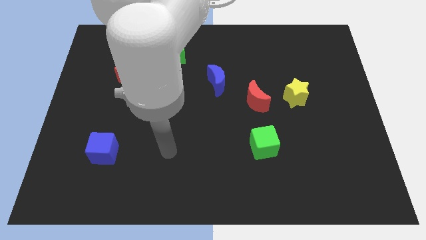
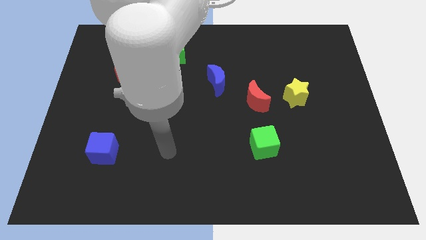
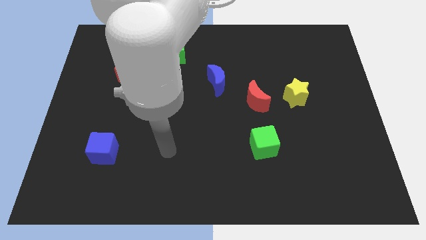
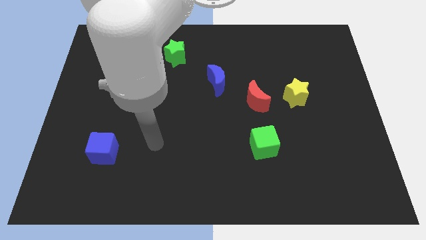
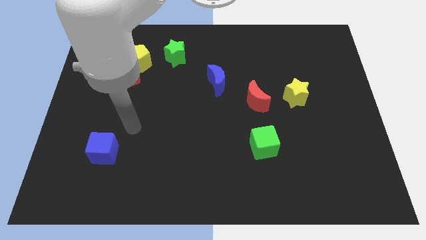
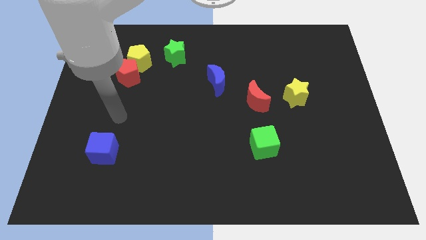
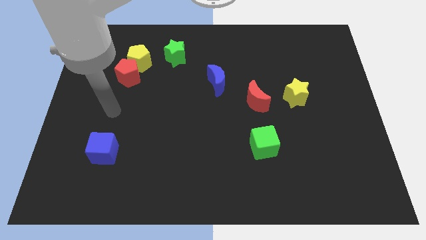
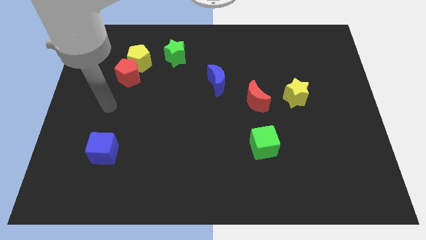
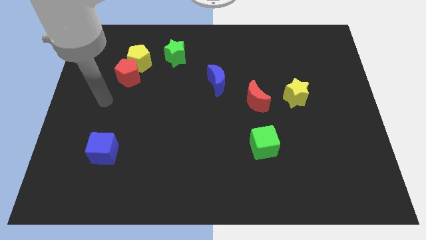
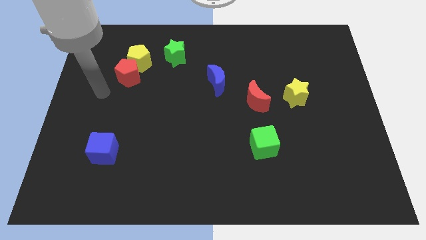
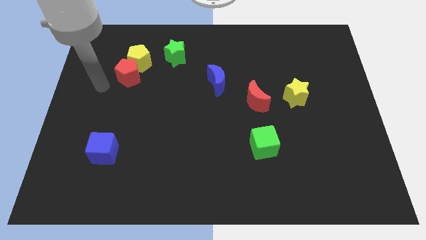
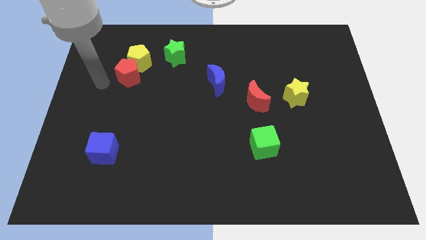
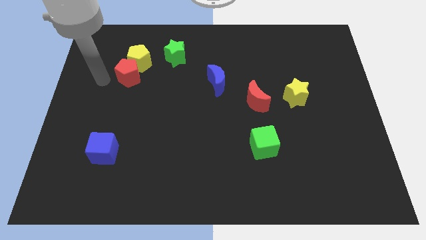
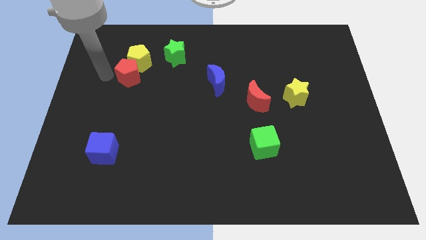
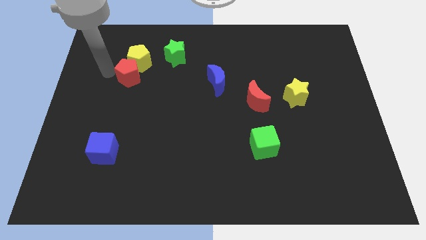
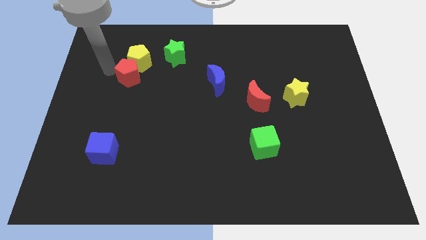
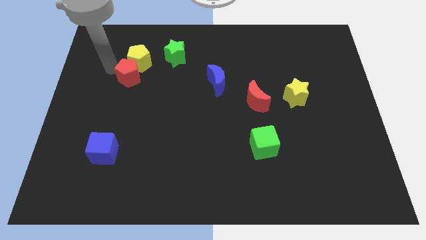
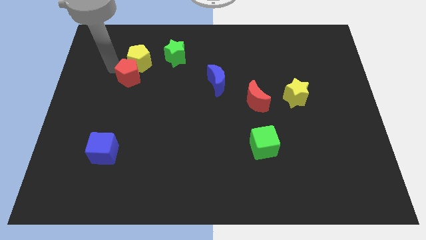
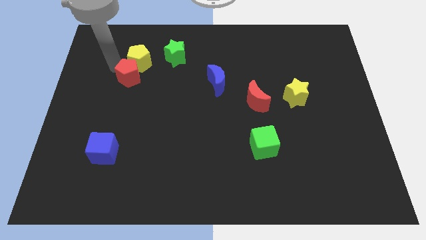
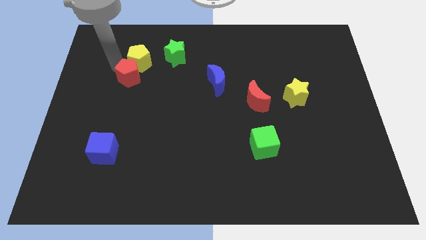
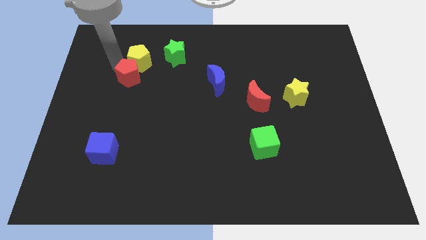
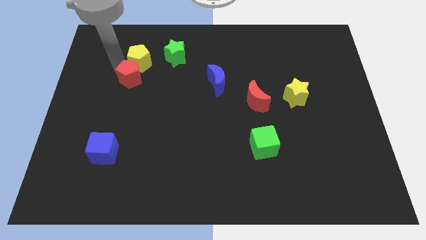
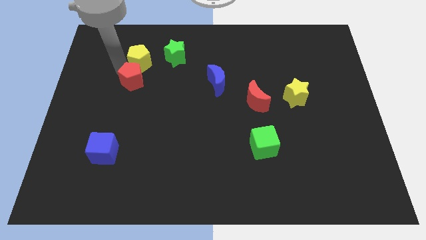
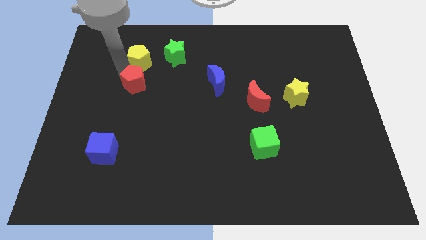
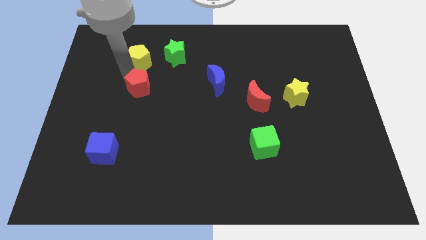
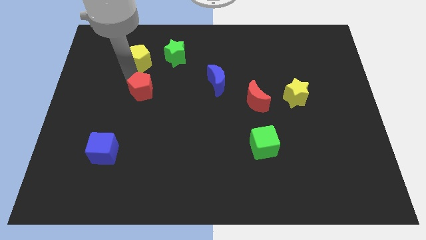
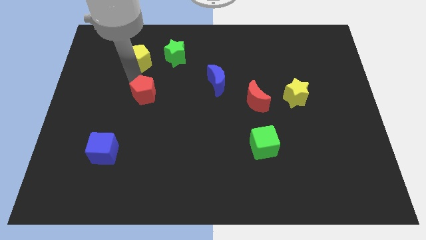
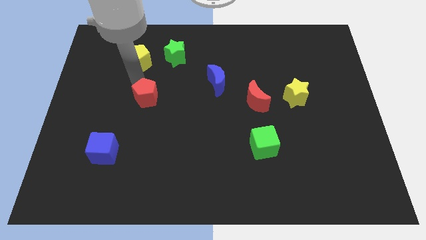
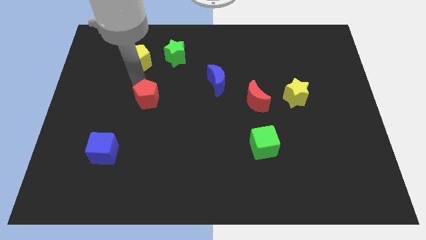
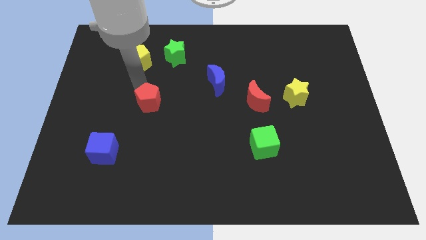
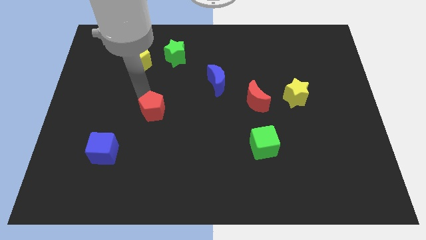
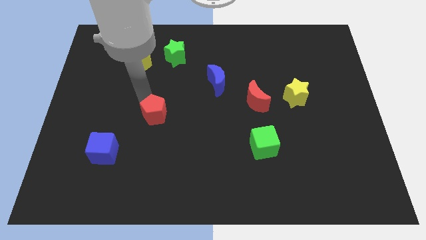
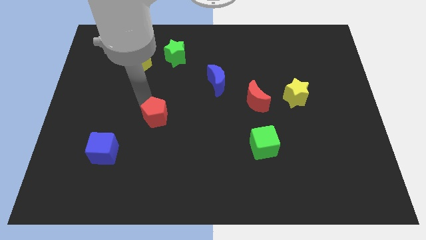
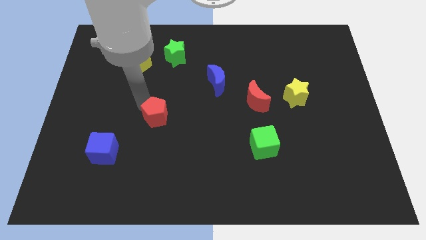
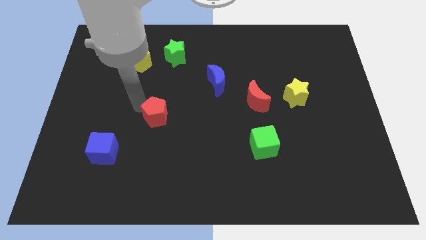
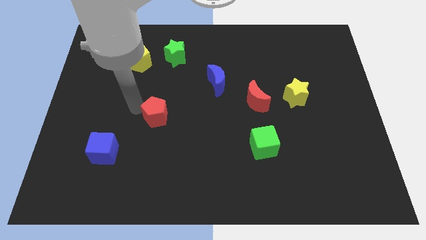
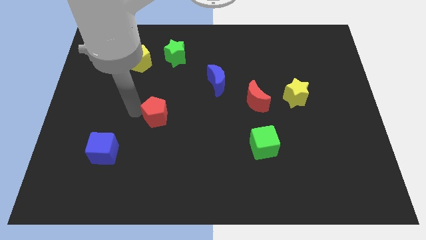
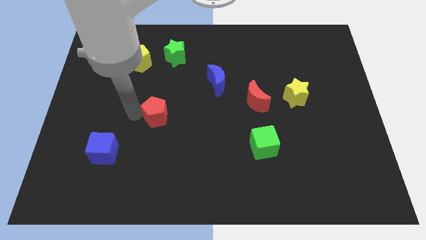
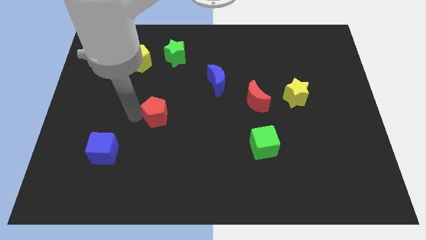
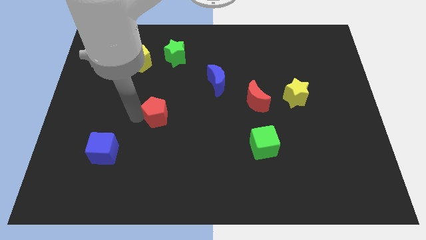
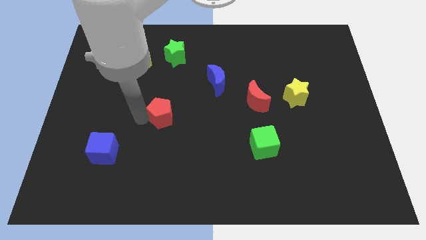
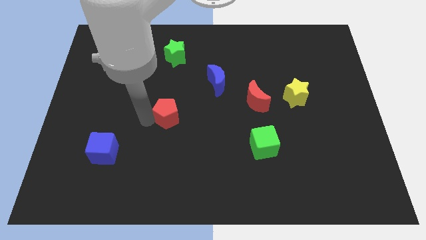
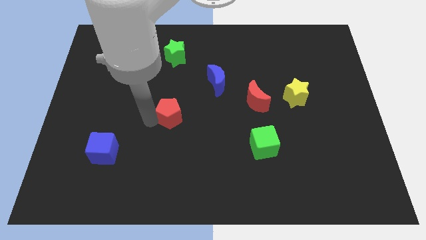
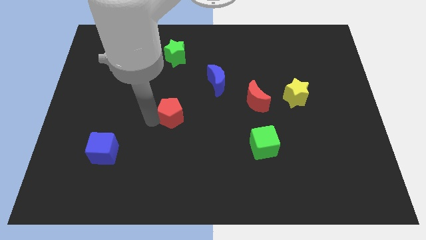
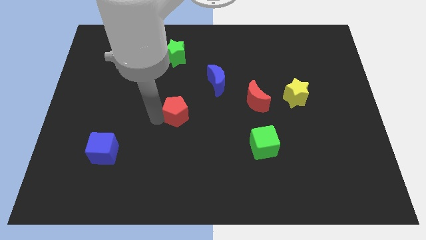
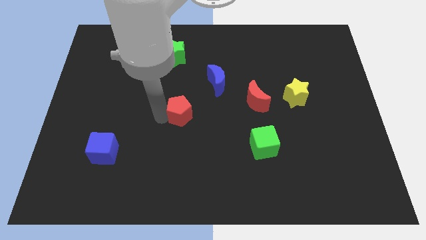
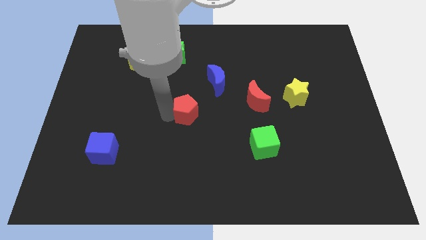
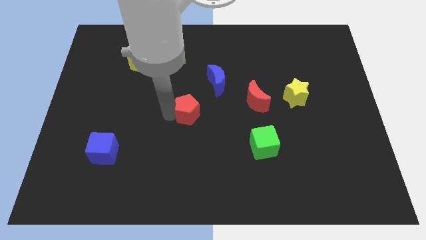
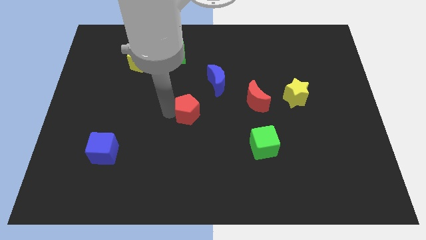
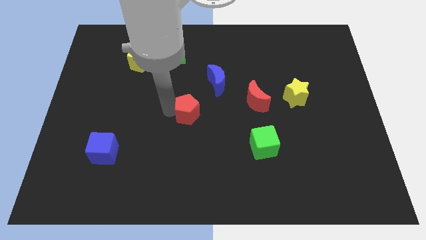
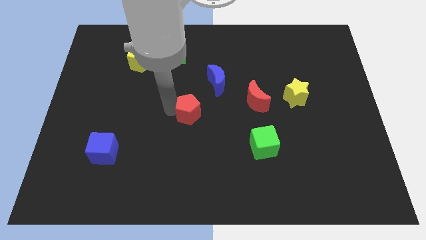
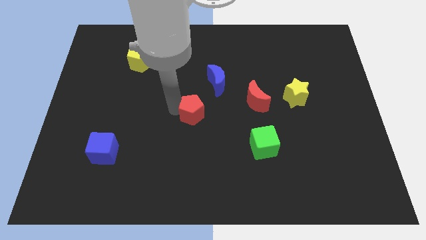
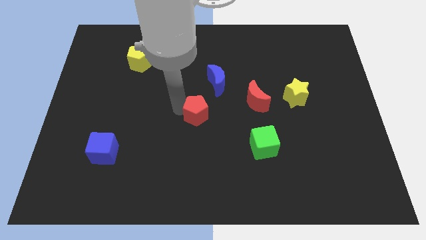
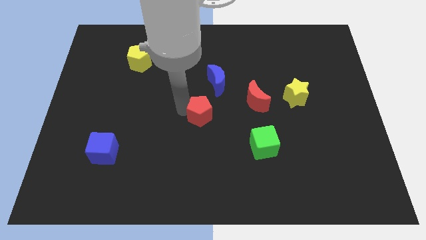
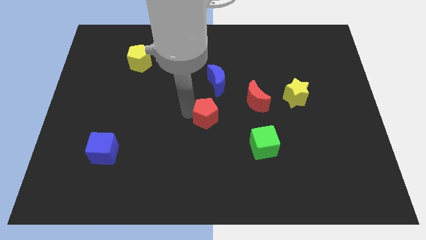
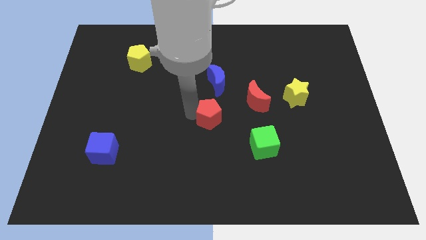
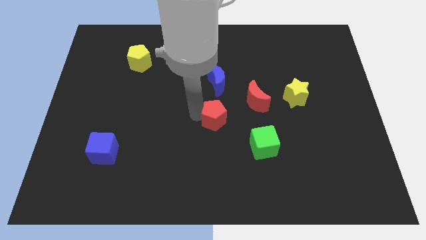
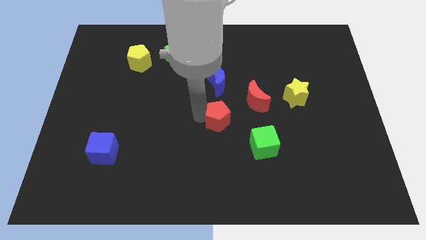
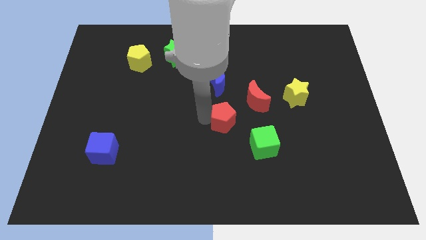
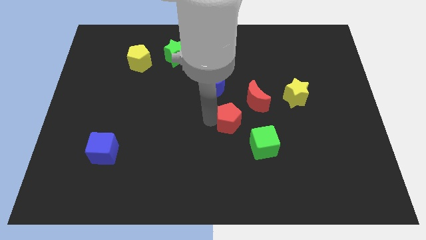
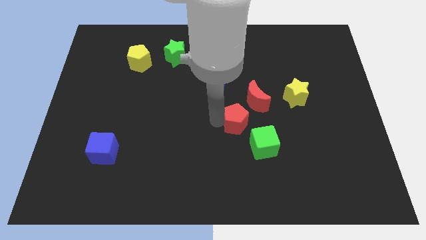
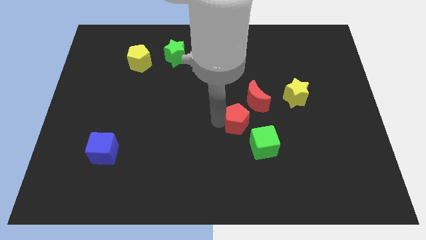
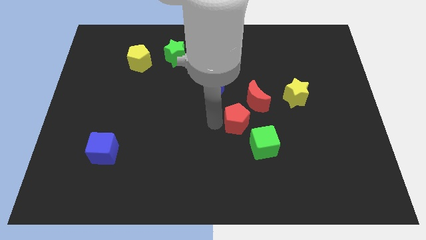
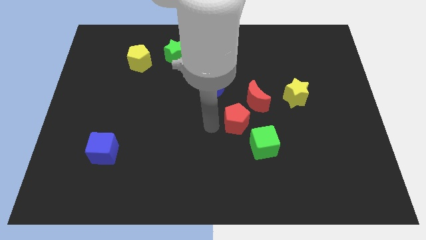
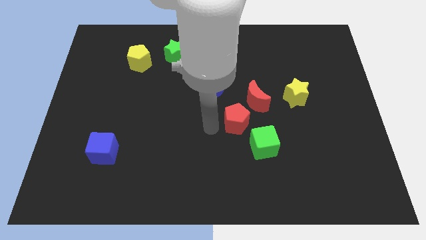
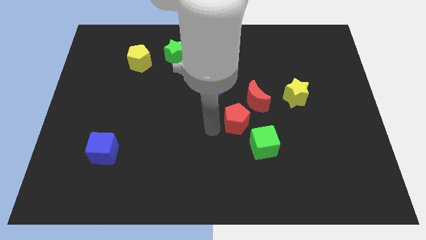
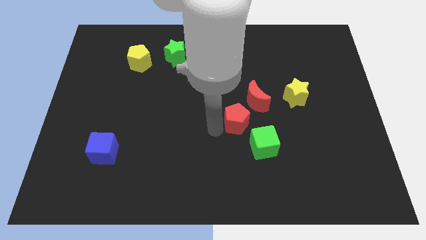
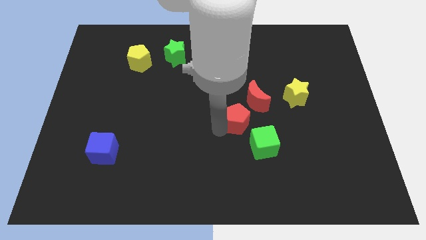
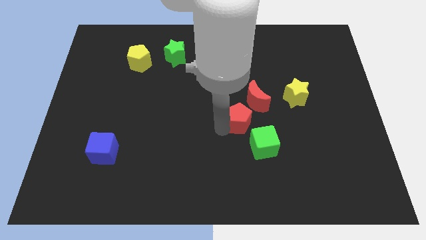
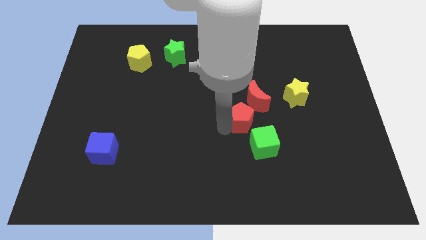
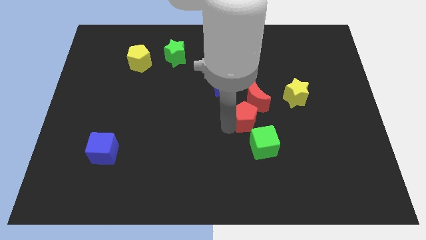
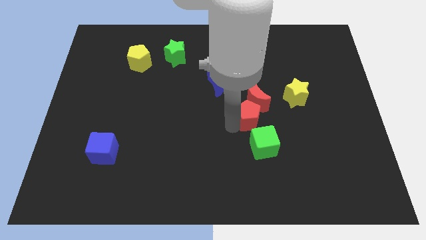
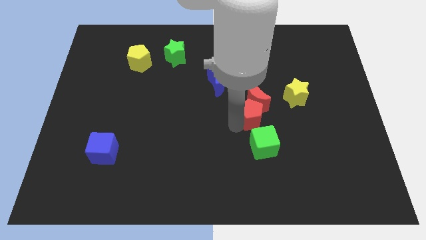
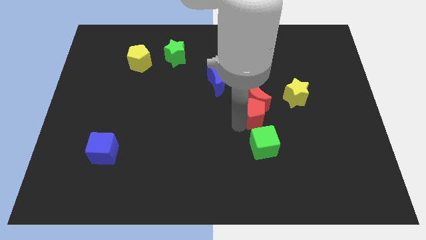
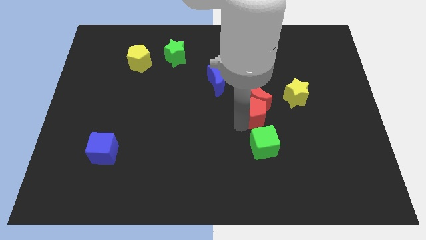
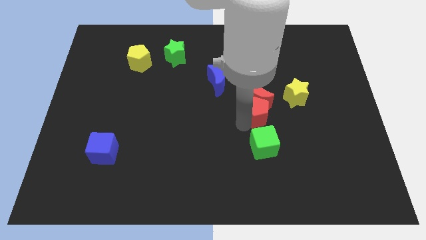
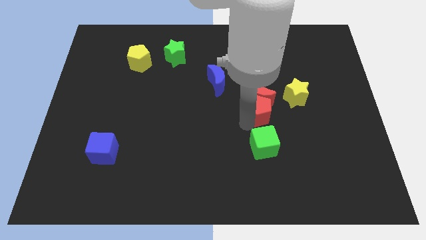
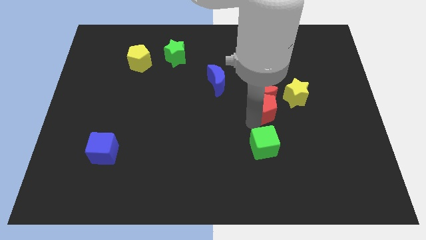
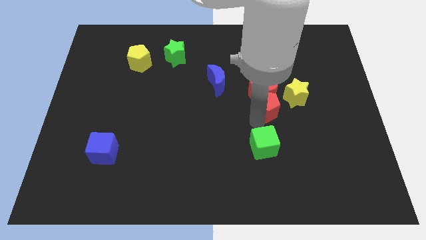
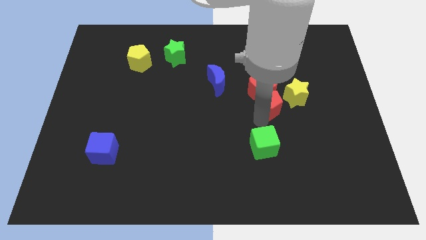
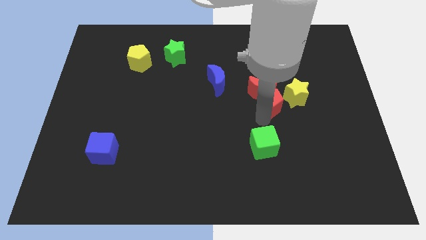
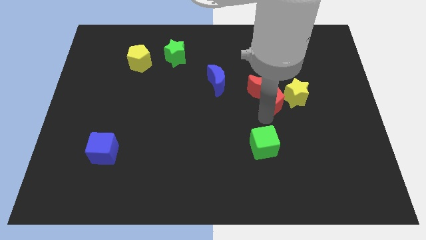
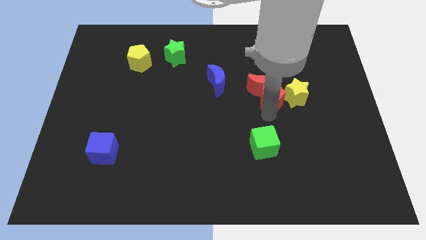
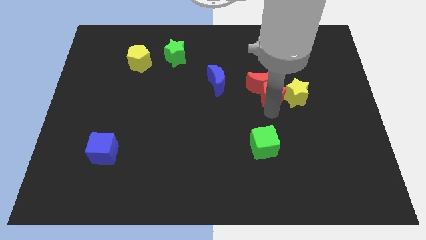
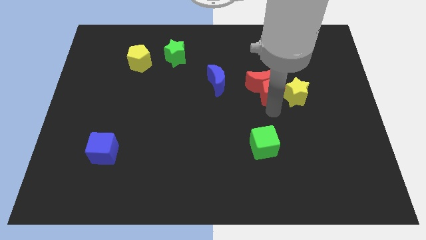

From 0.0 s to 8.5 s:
slide the red pentagon towards the yellow star

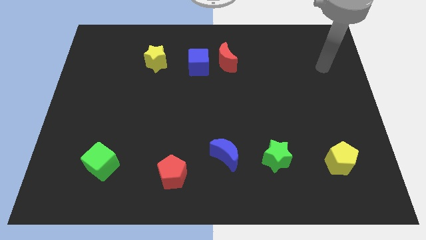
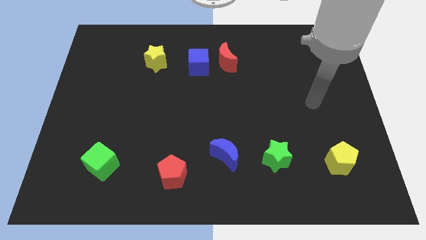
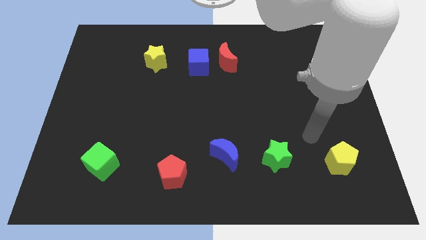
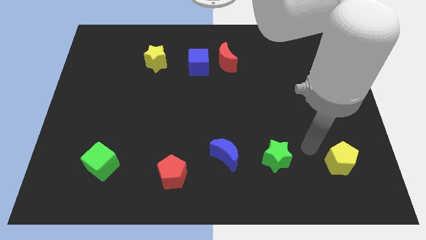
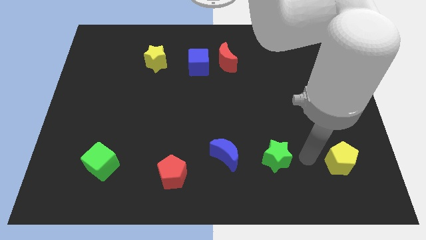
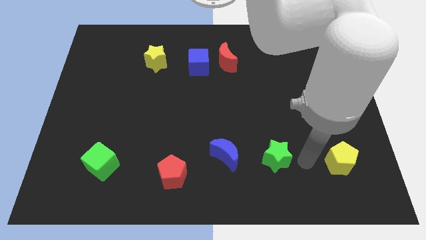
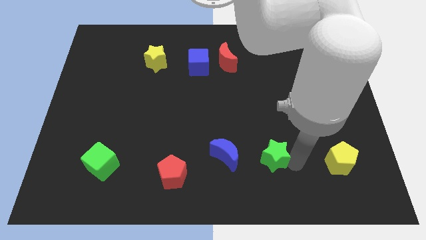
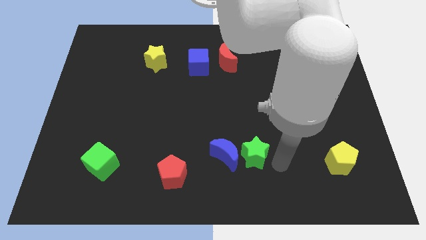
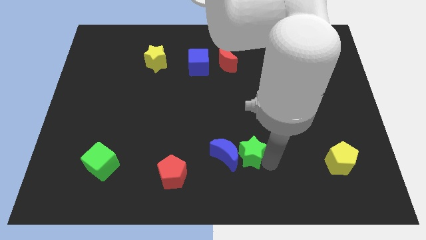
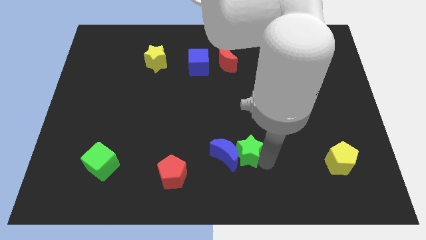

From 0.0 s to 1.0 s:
move the green star towards the blue moon
